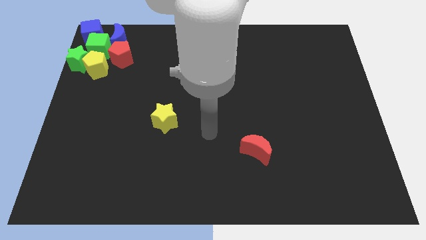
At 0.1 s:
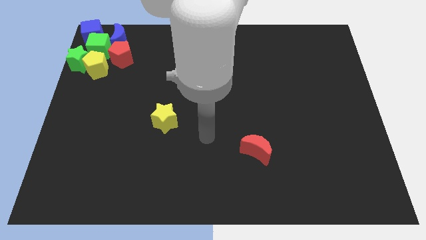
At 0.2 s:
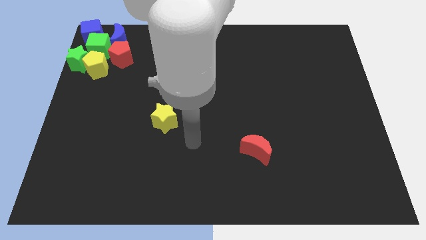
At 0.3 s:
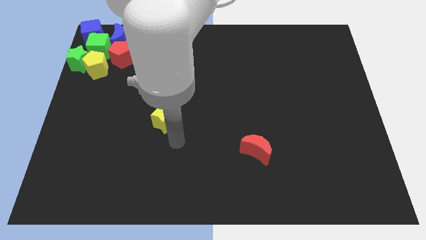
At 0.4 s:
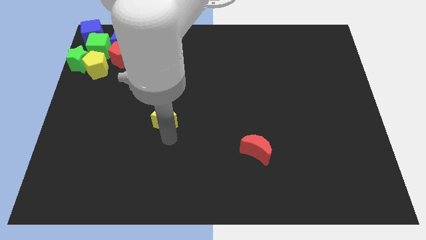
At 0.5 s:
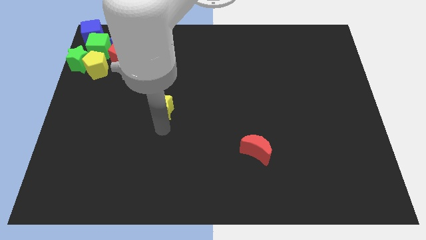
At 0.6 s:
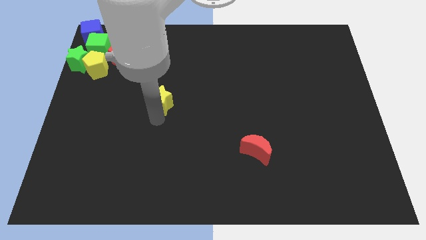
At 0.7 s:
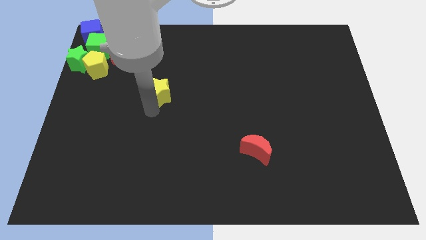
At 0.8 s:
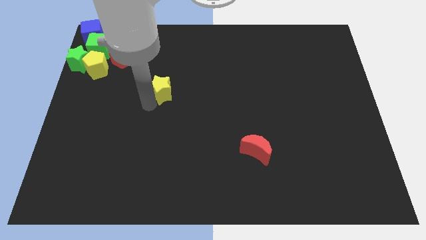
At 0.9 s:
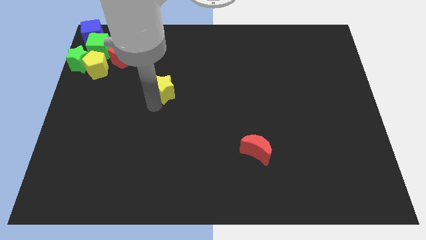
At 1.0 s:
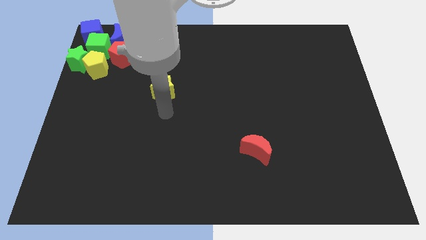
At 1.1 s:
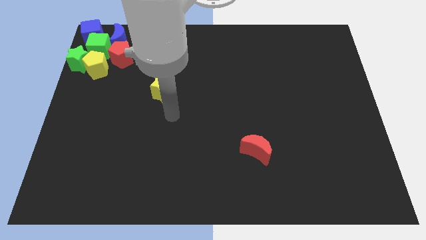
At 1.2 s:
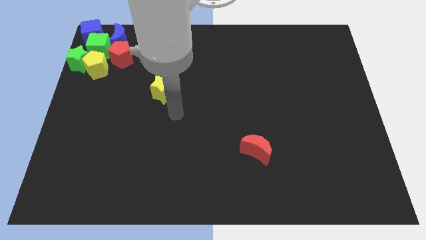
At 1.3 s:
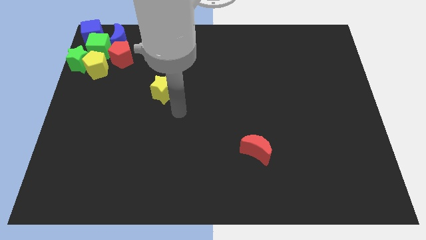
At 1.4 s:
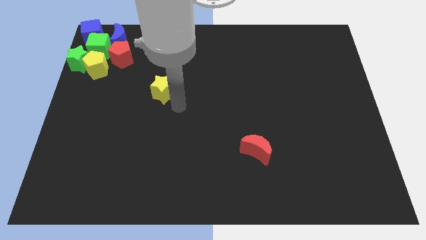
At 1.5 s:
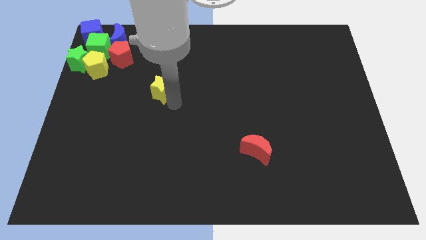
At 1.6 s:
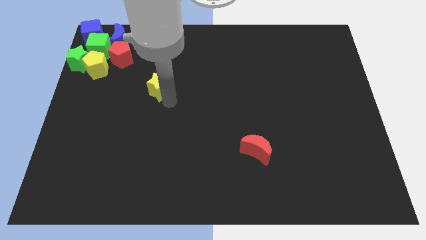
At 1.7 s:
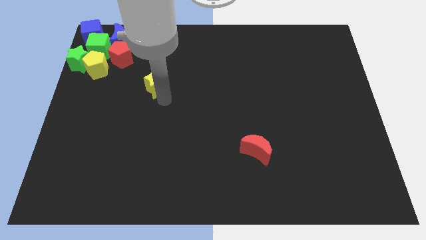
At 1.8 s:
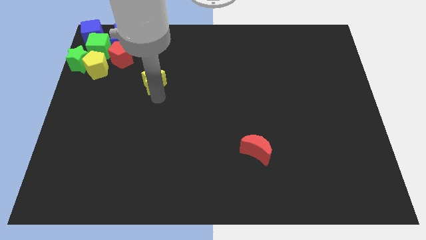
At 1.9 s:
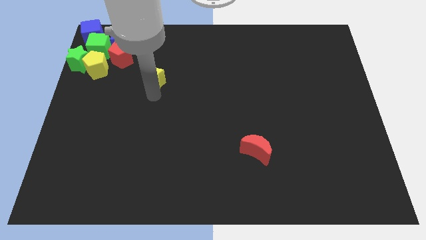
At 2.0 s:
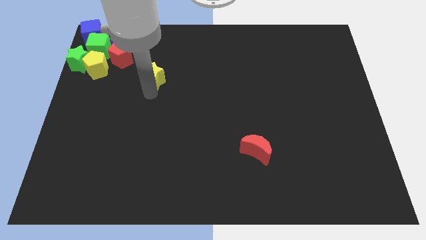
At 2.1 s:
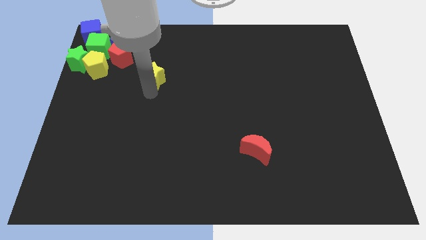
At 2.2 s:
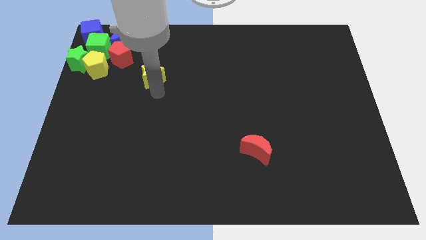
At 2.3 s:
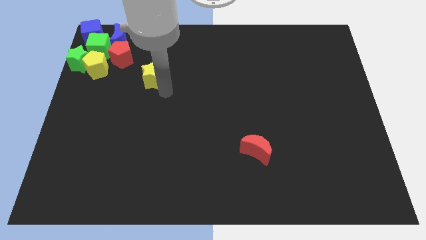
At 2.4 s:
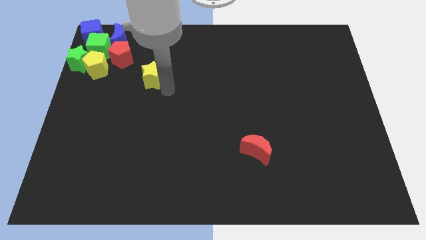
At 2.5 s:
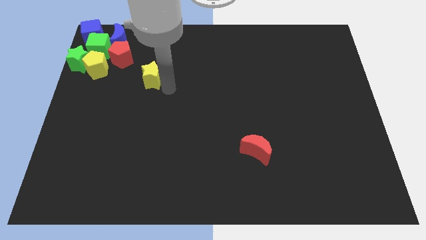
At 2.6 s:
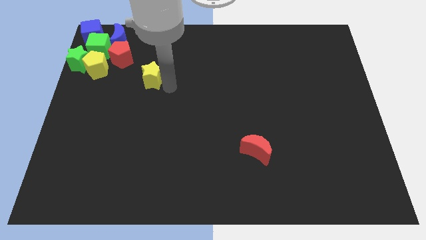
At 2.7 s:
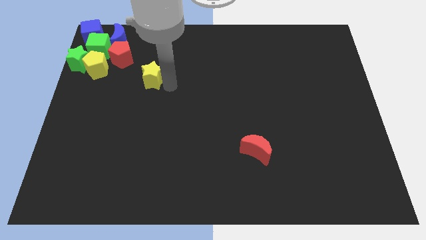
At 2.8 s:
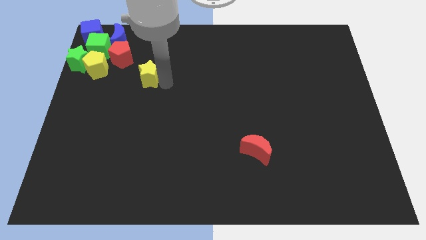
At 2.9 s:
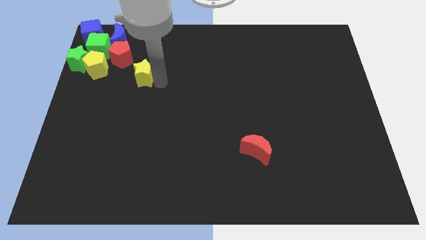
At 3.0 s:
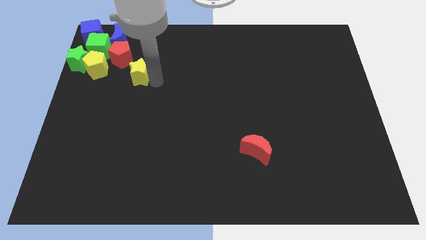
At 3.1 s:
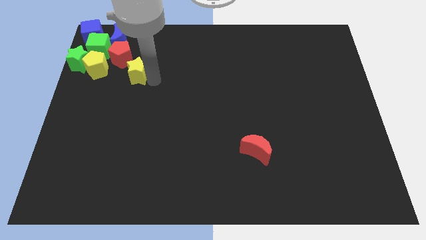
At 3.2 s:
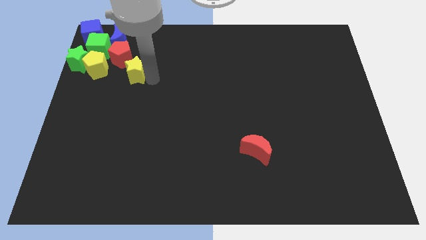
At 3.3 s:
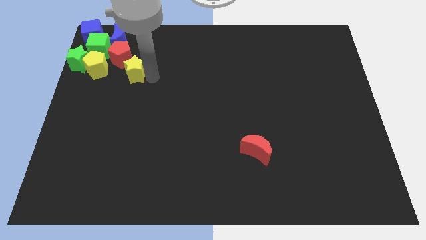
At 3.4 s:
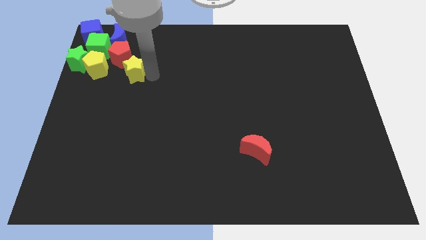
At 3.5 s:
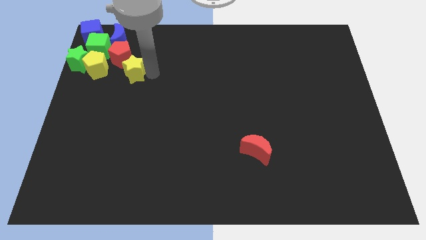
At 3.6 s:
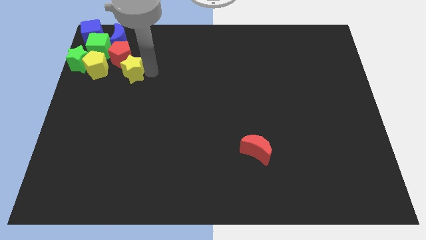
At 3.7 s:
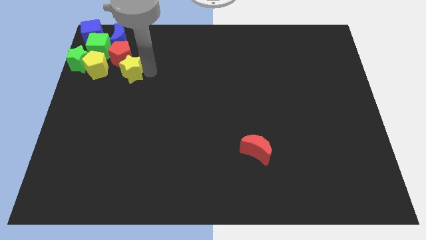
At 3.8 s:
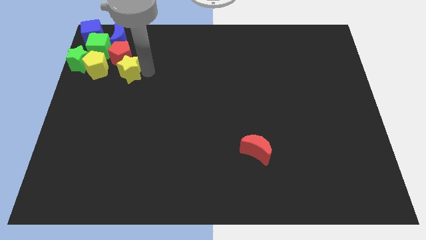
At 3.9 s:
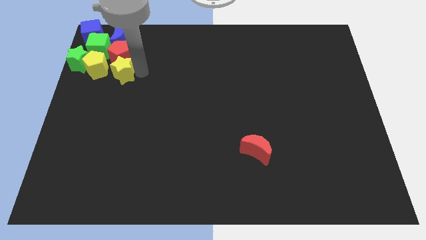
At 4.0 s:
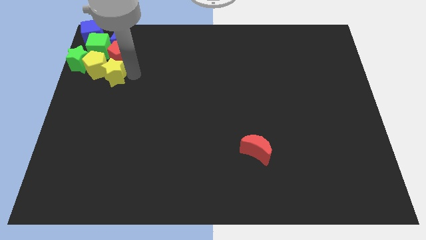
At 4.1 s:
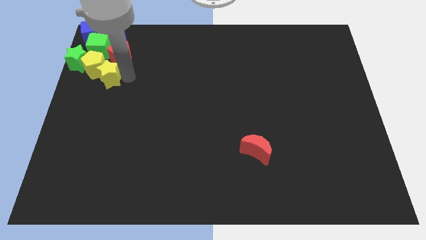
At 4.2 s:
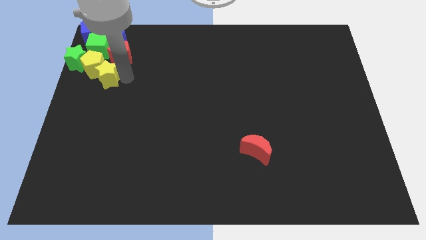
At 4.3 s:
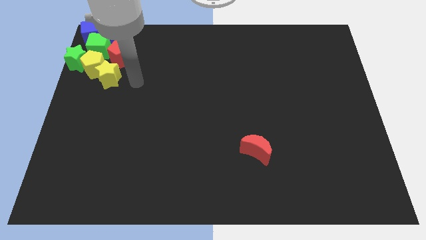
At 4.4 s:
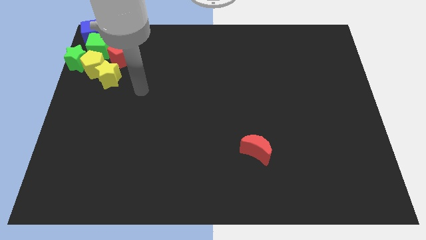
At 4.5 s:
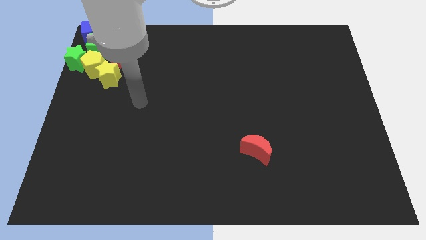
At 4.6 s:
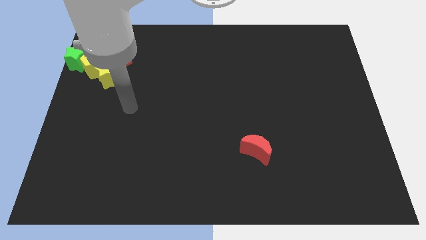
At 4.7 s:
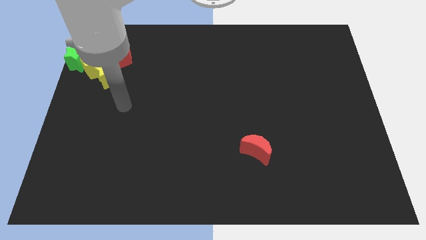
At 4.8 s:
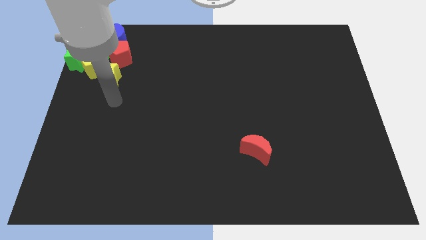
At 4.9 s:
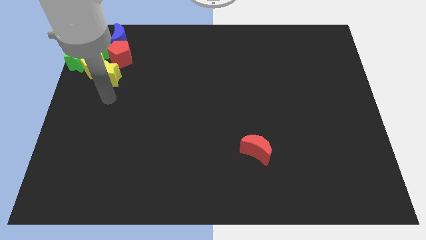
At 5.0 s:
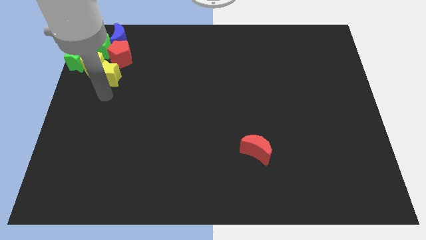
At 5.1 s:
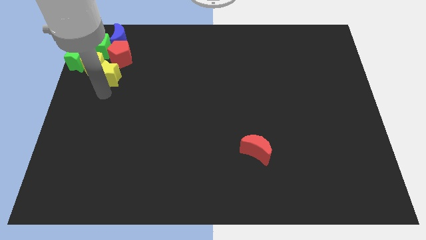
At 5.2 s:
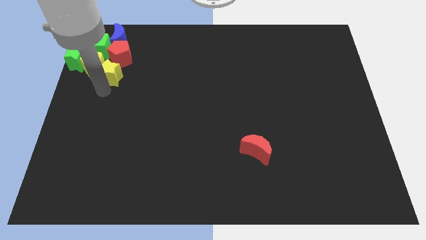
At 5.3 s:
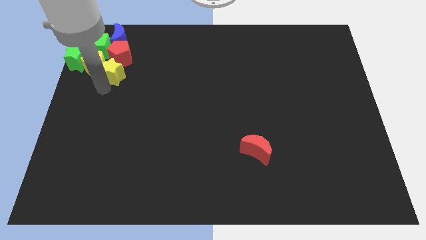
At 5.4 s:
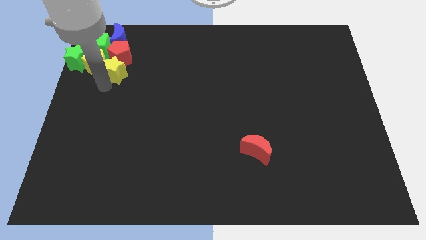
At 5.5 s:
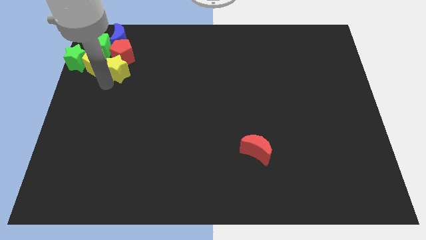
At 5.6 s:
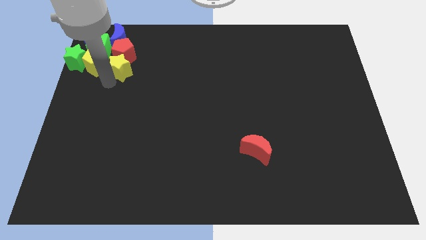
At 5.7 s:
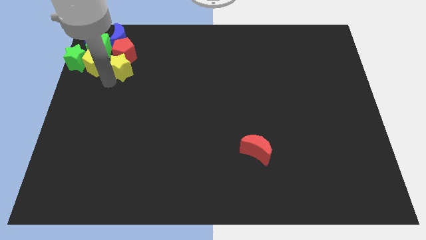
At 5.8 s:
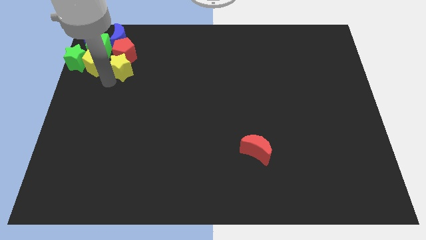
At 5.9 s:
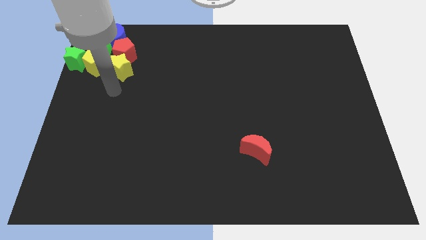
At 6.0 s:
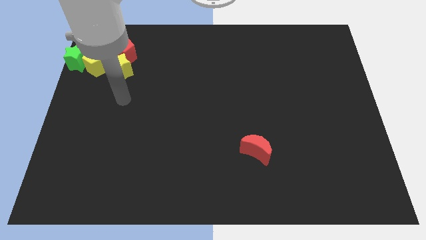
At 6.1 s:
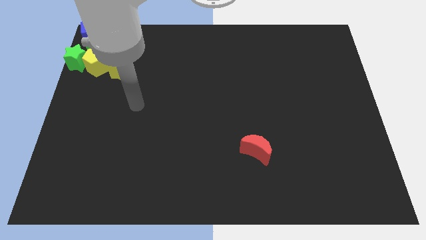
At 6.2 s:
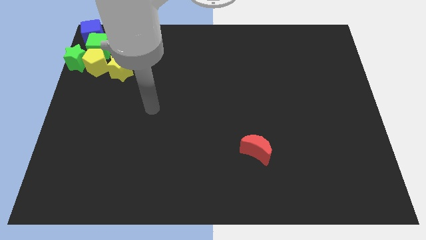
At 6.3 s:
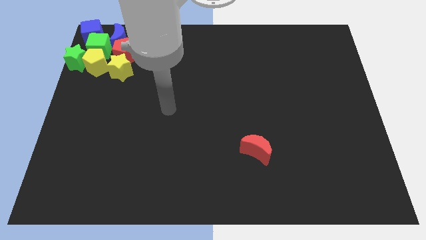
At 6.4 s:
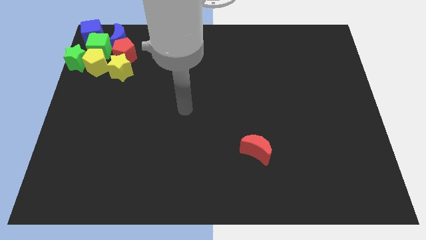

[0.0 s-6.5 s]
move the yellow star into the group of blocks

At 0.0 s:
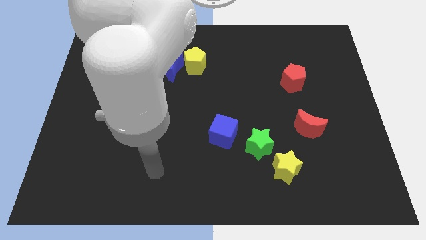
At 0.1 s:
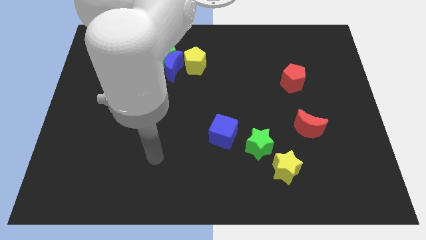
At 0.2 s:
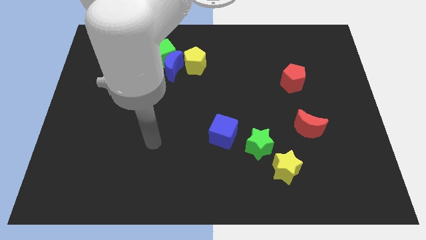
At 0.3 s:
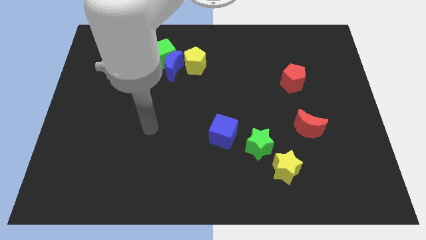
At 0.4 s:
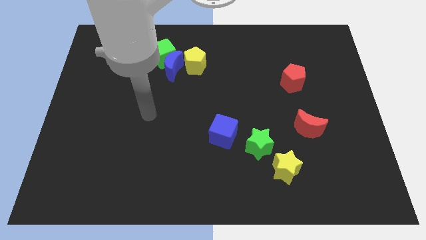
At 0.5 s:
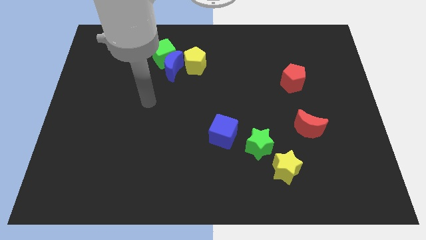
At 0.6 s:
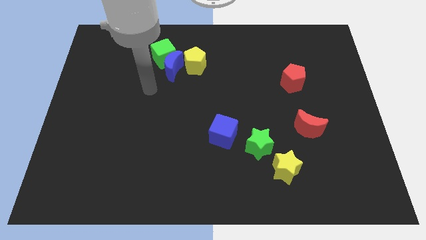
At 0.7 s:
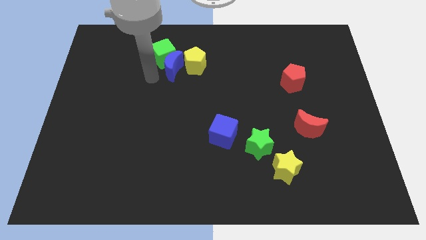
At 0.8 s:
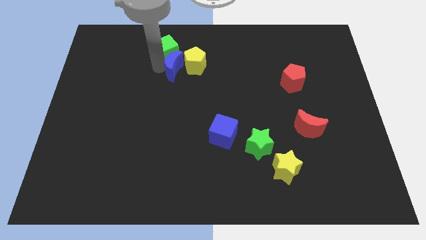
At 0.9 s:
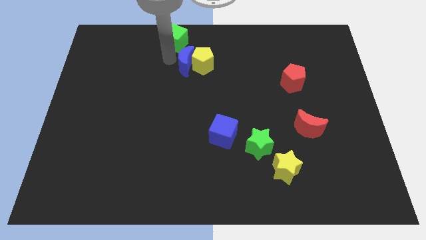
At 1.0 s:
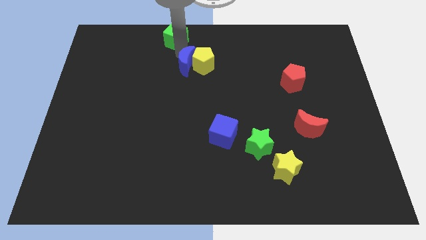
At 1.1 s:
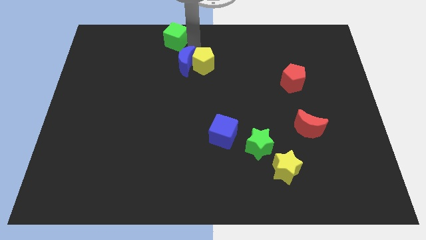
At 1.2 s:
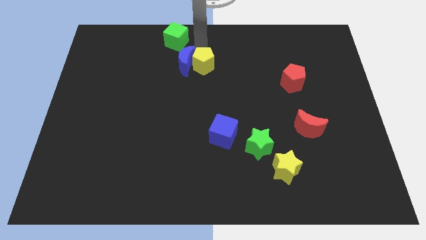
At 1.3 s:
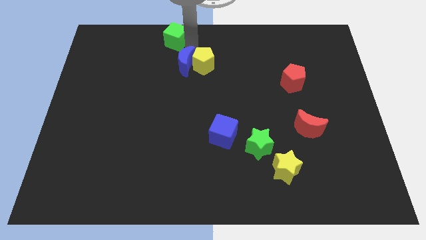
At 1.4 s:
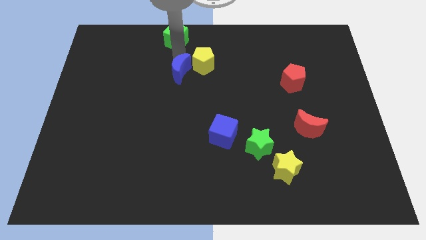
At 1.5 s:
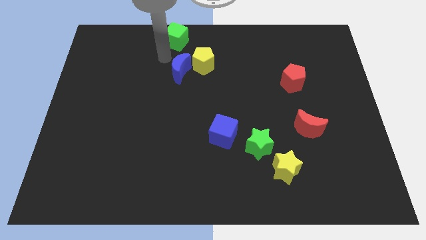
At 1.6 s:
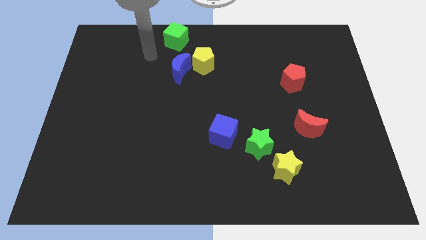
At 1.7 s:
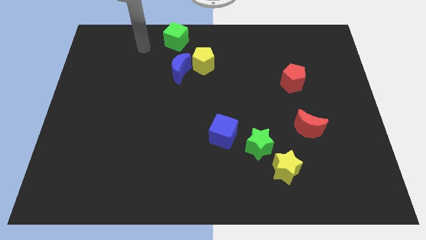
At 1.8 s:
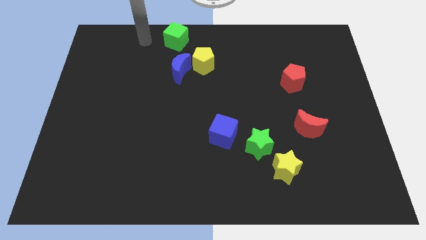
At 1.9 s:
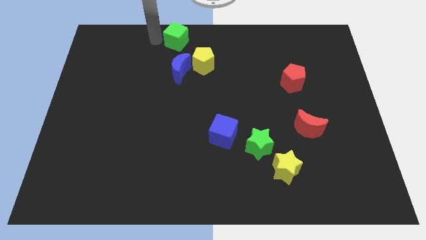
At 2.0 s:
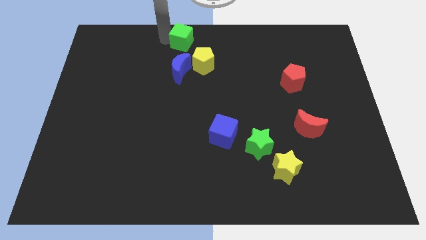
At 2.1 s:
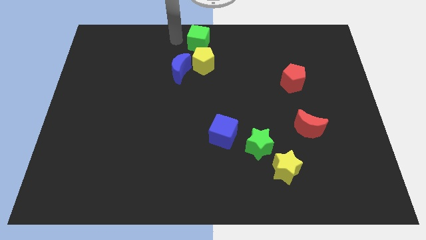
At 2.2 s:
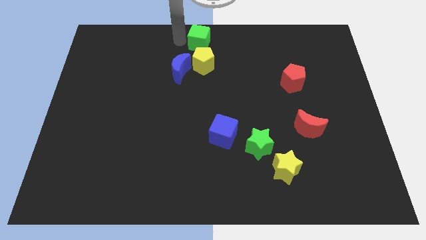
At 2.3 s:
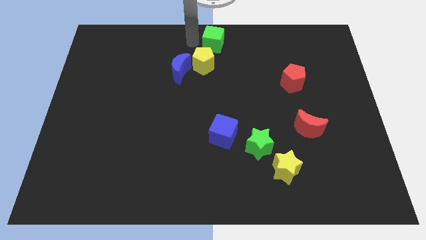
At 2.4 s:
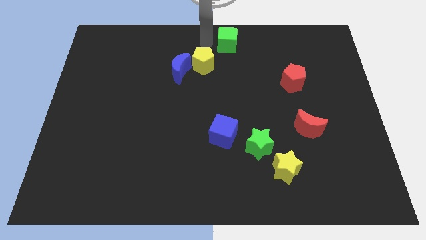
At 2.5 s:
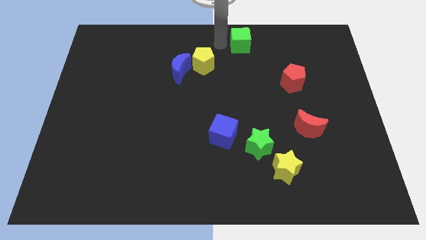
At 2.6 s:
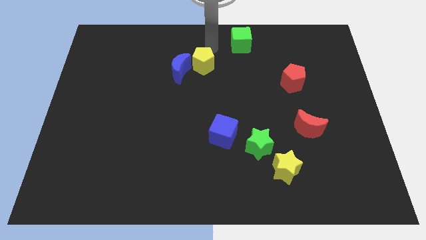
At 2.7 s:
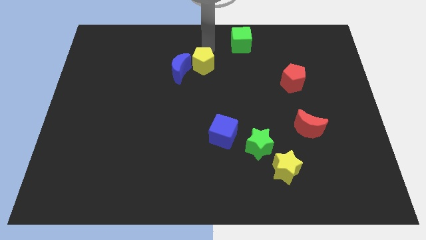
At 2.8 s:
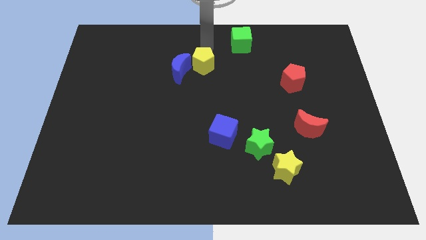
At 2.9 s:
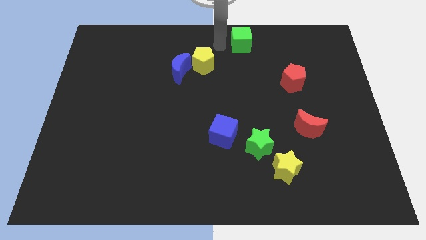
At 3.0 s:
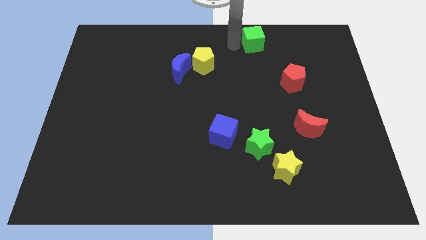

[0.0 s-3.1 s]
place the green cube above the green star
